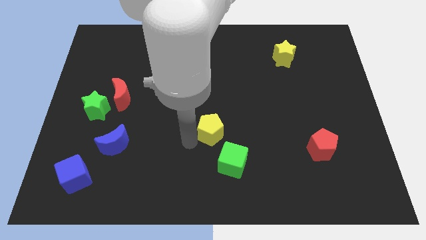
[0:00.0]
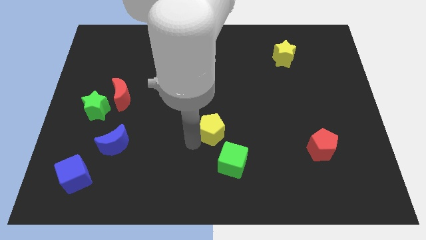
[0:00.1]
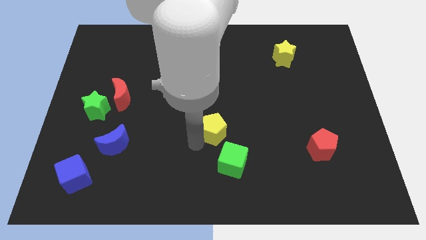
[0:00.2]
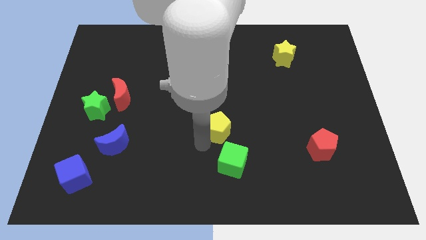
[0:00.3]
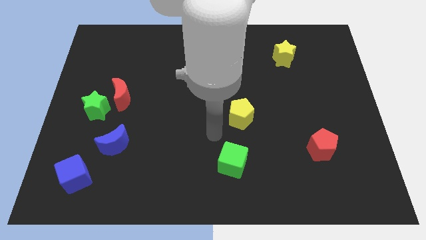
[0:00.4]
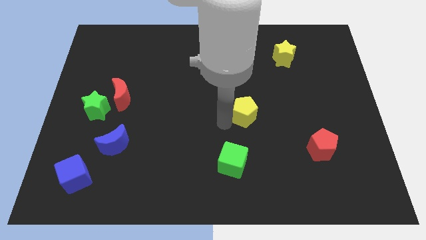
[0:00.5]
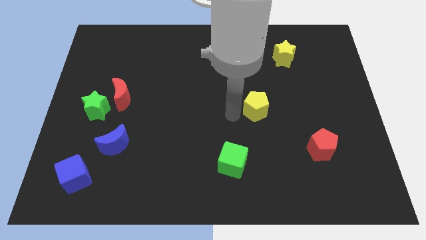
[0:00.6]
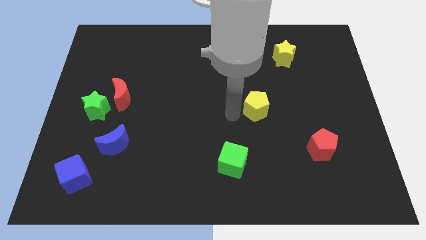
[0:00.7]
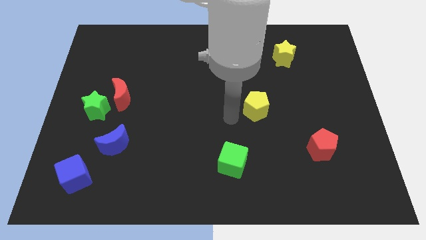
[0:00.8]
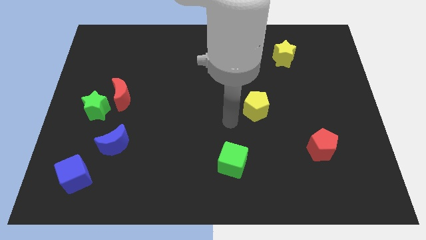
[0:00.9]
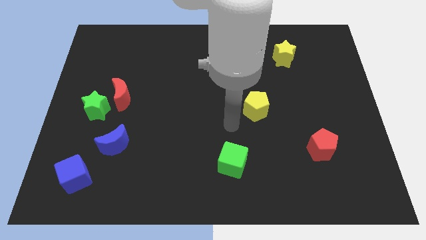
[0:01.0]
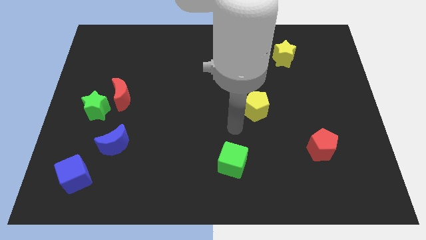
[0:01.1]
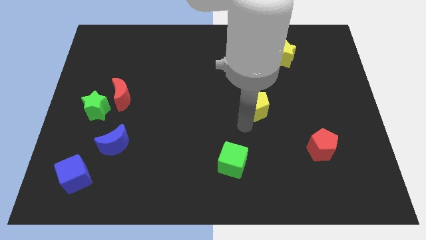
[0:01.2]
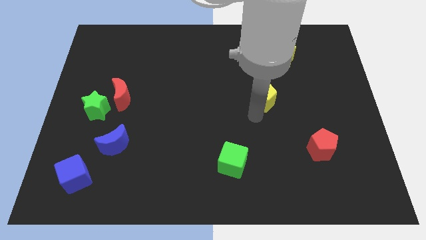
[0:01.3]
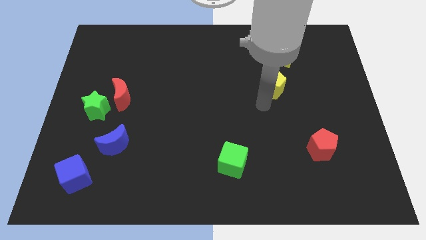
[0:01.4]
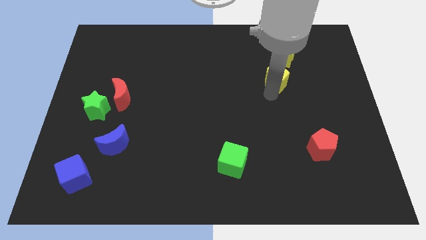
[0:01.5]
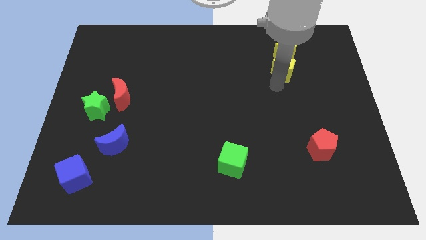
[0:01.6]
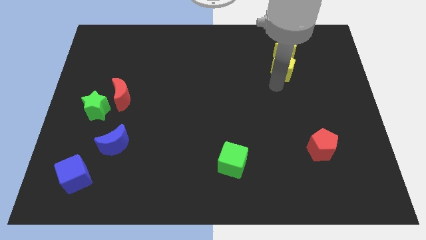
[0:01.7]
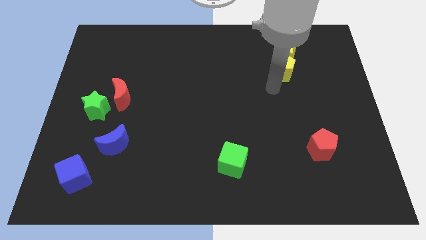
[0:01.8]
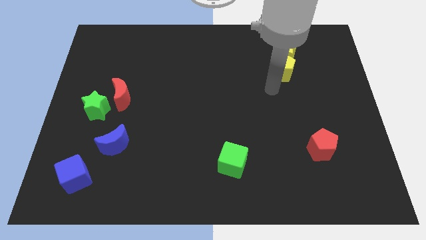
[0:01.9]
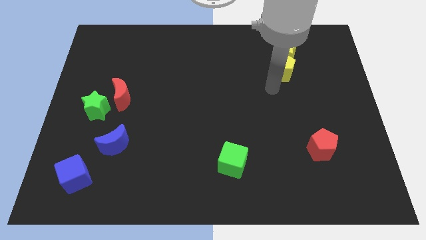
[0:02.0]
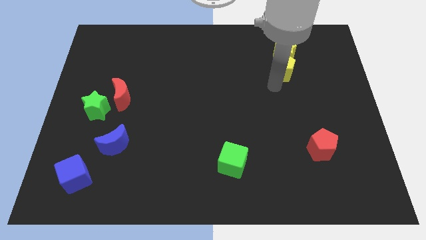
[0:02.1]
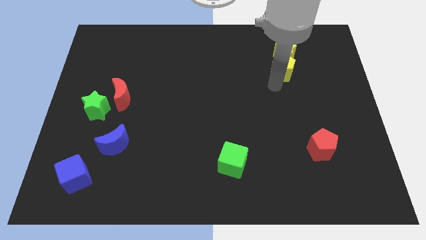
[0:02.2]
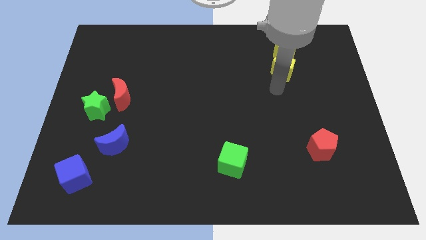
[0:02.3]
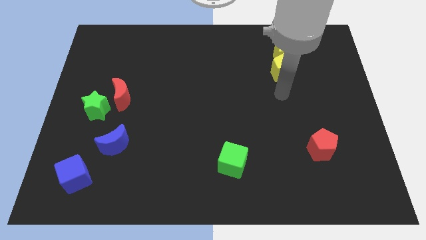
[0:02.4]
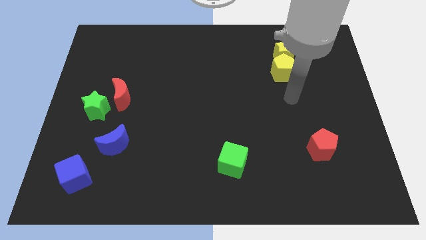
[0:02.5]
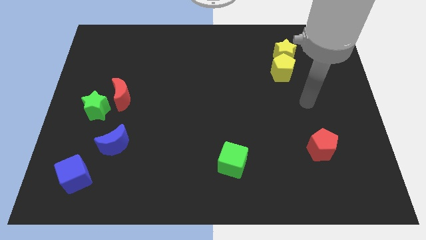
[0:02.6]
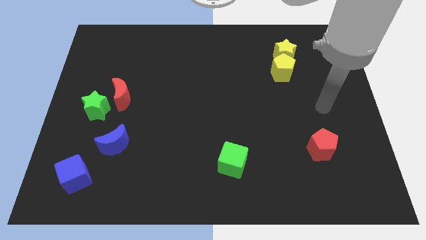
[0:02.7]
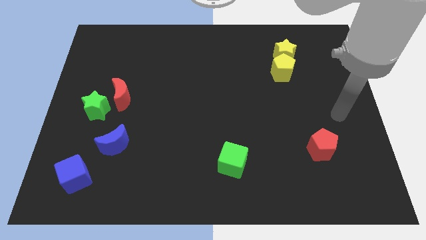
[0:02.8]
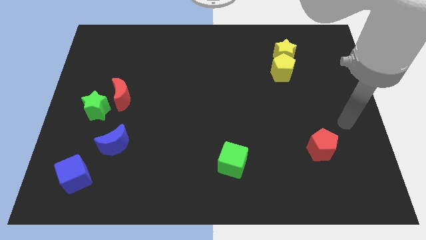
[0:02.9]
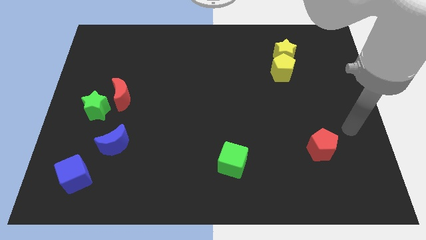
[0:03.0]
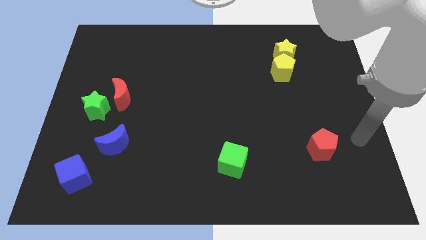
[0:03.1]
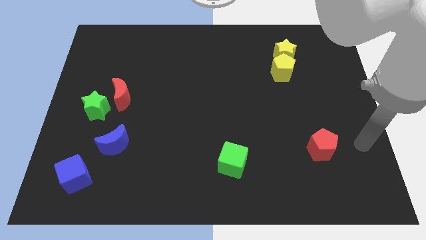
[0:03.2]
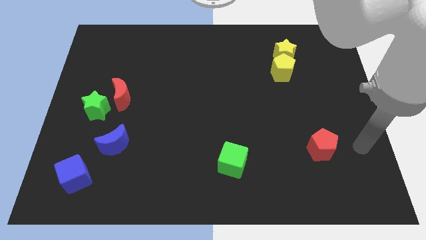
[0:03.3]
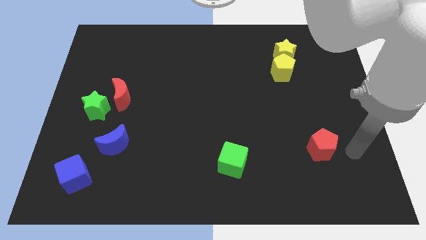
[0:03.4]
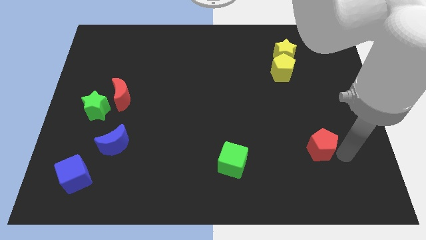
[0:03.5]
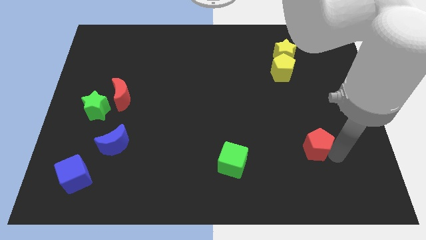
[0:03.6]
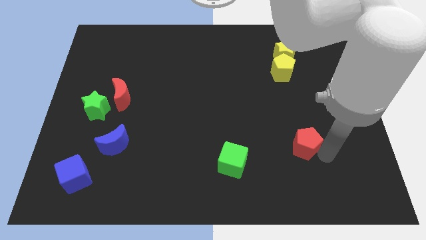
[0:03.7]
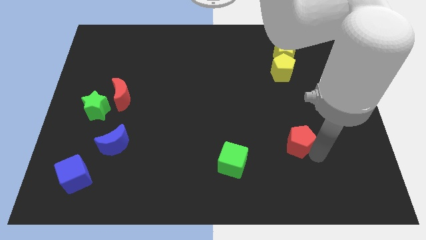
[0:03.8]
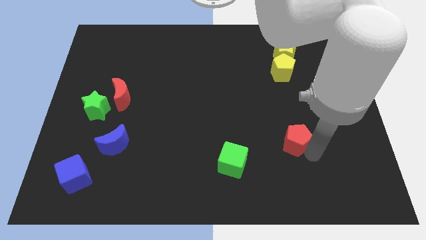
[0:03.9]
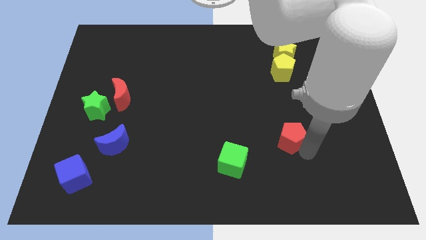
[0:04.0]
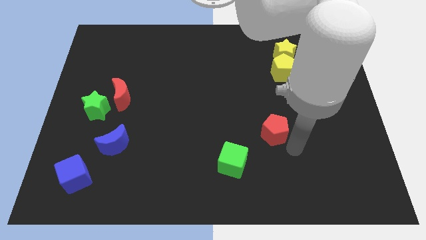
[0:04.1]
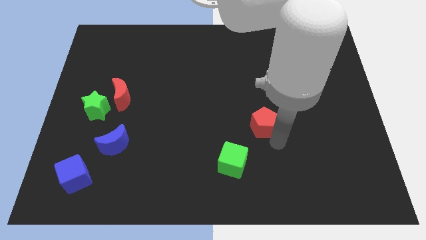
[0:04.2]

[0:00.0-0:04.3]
move red pentagon towards center

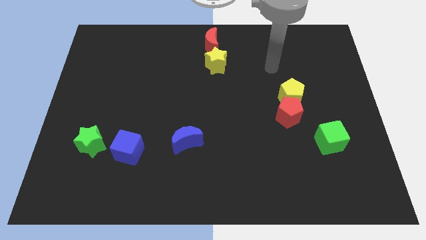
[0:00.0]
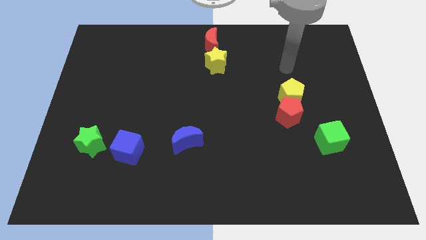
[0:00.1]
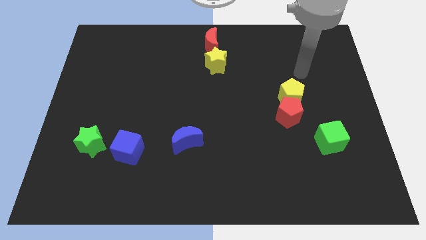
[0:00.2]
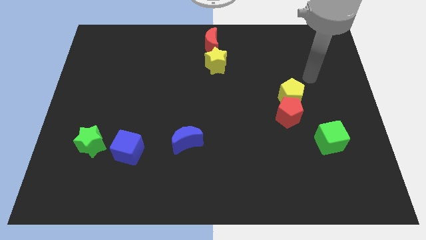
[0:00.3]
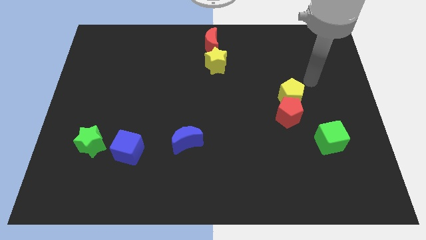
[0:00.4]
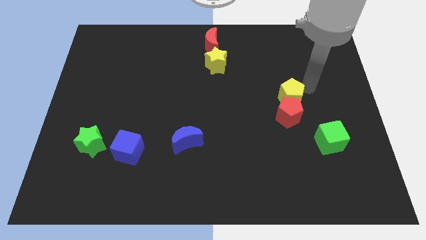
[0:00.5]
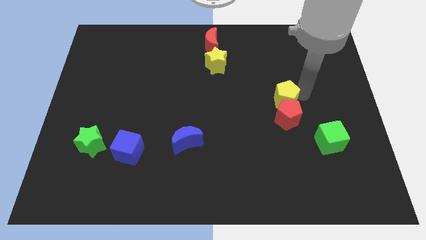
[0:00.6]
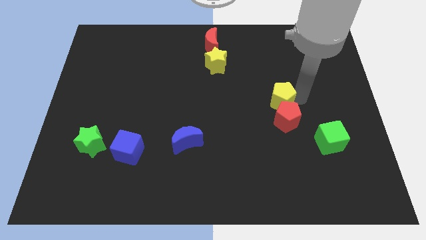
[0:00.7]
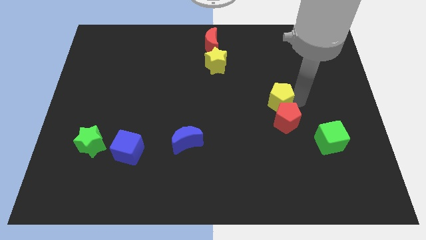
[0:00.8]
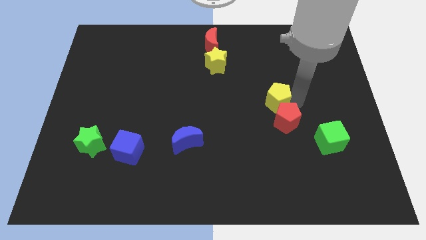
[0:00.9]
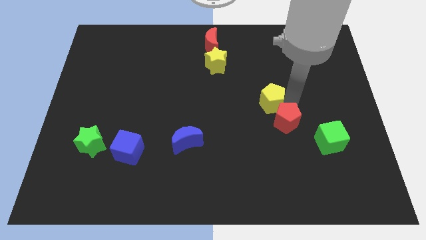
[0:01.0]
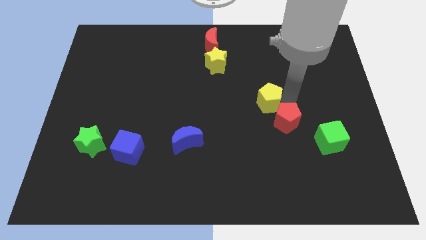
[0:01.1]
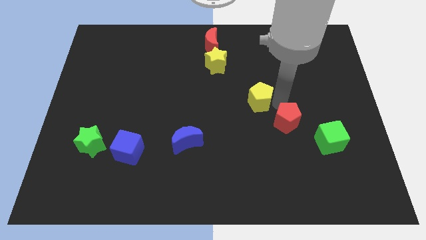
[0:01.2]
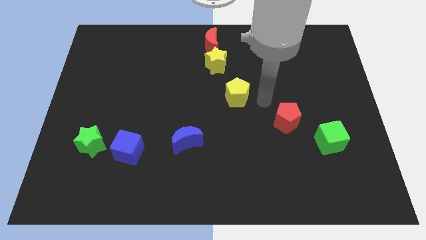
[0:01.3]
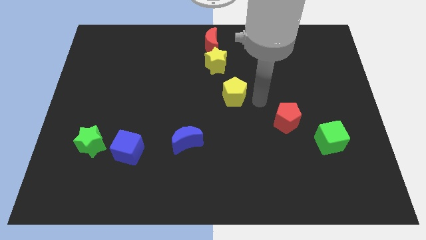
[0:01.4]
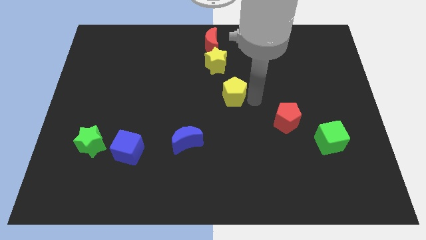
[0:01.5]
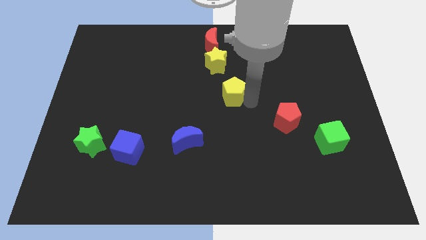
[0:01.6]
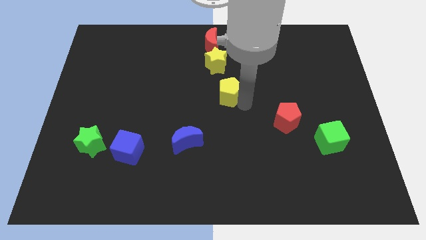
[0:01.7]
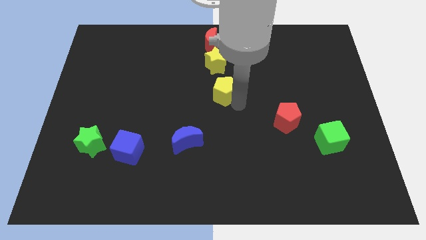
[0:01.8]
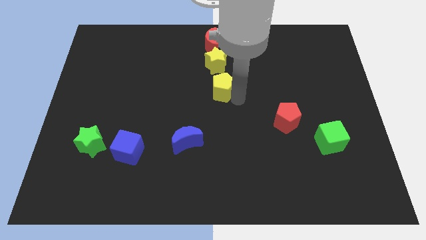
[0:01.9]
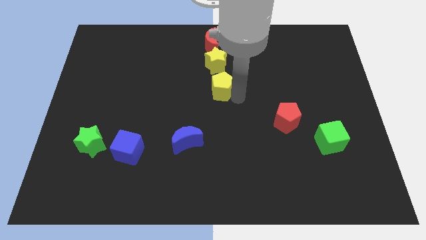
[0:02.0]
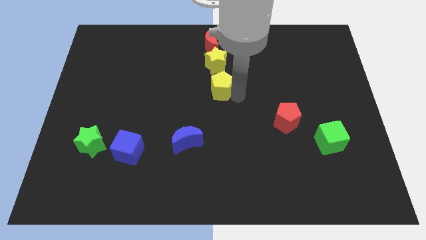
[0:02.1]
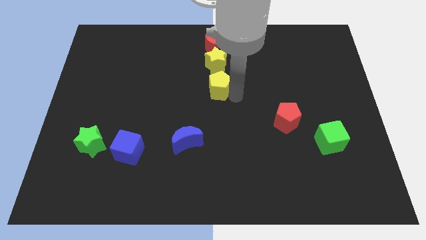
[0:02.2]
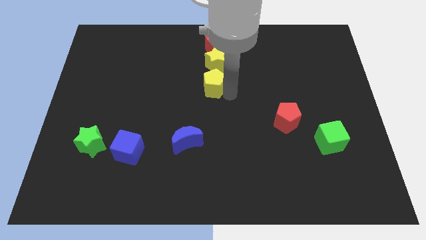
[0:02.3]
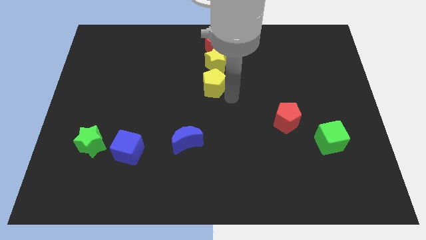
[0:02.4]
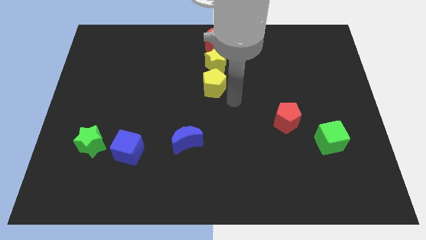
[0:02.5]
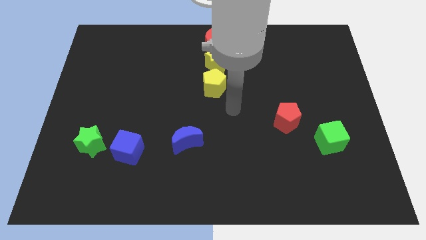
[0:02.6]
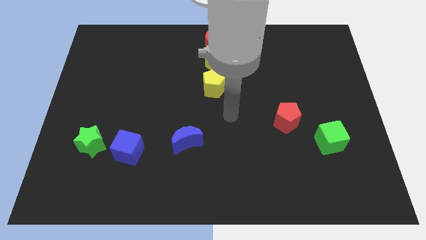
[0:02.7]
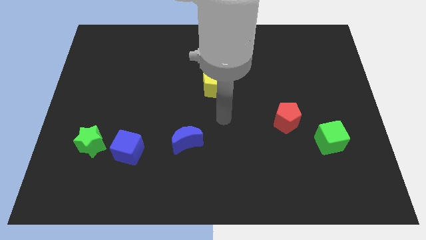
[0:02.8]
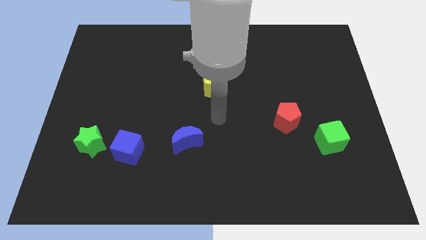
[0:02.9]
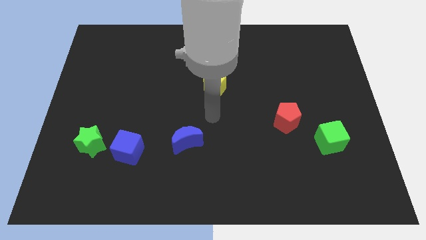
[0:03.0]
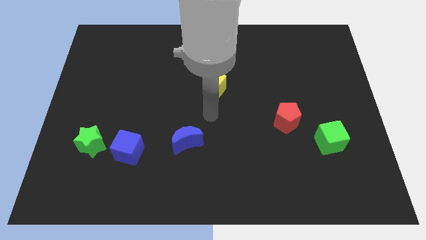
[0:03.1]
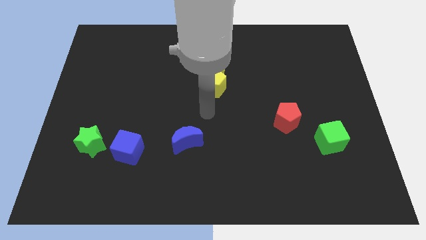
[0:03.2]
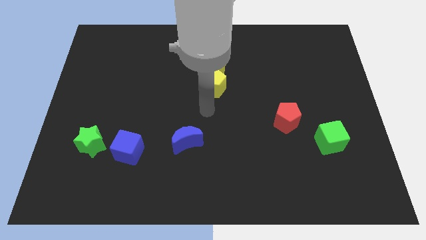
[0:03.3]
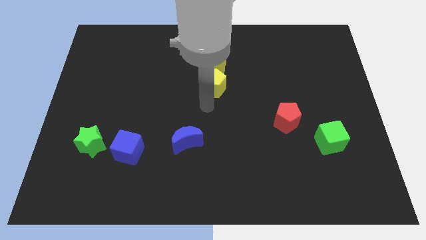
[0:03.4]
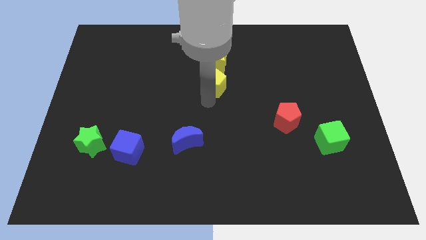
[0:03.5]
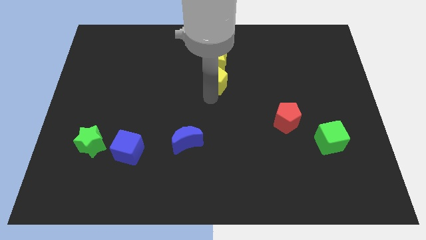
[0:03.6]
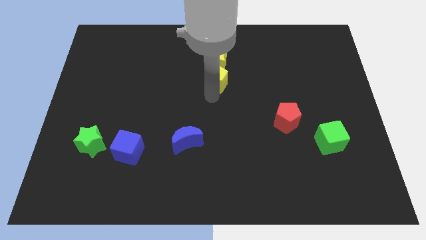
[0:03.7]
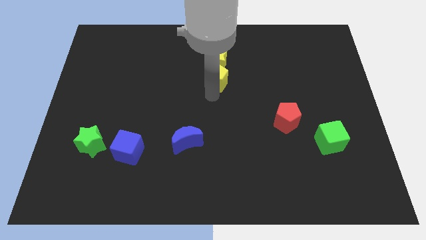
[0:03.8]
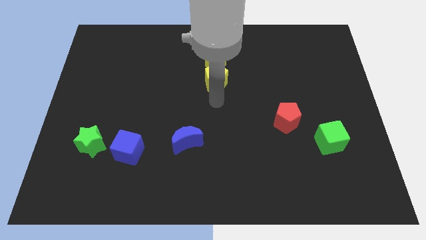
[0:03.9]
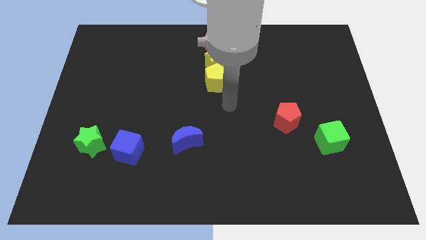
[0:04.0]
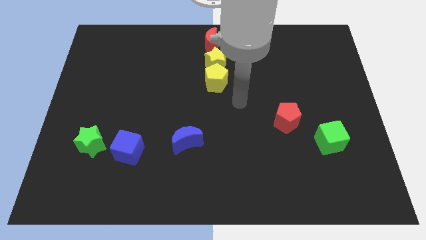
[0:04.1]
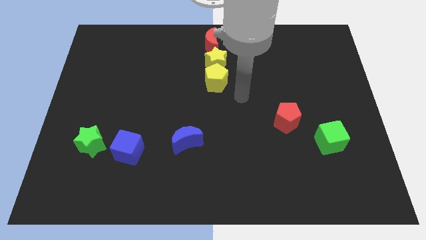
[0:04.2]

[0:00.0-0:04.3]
move the yellow pentagon to the bottom side of the yellow star

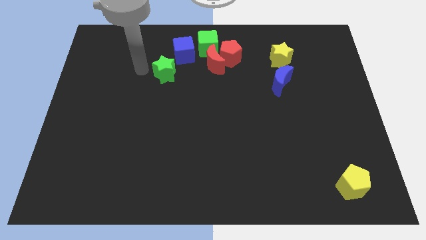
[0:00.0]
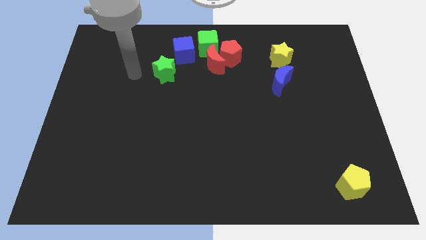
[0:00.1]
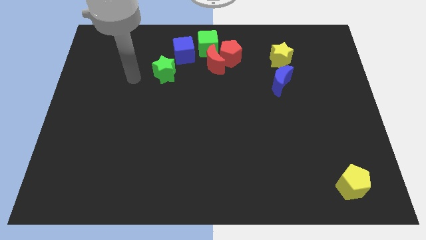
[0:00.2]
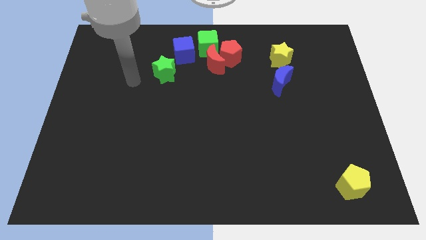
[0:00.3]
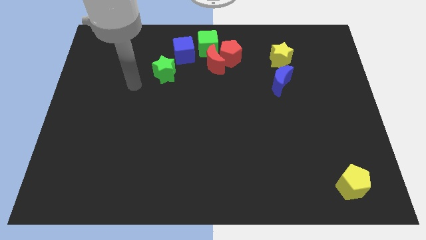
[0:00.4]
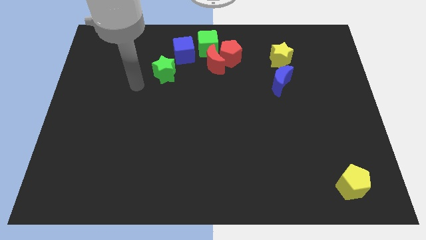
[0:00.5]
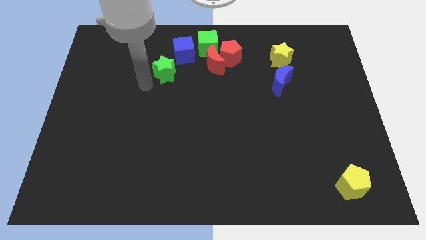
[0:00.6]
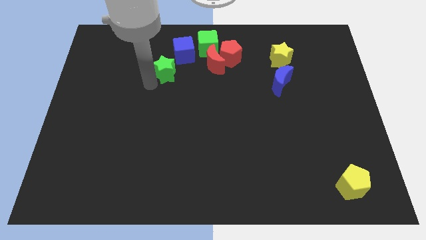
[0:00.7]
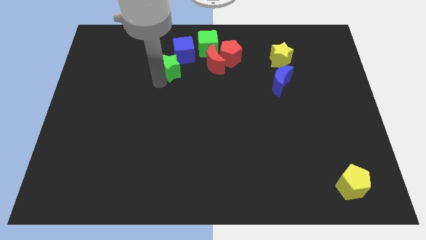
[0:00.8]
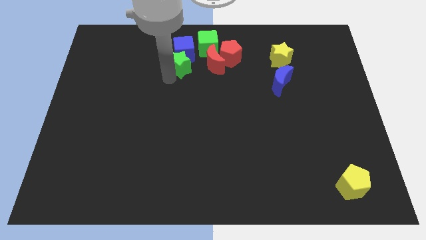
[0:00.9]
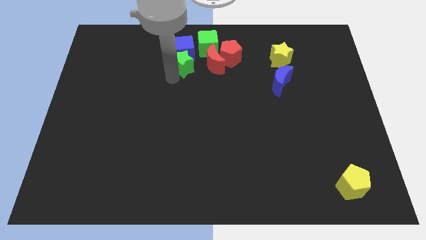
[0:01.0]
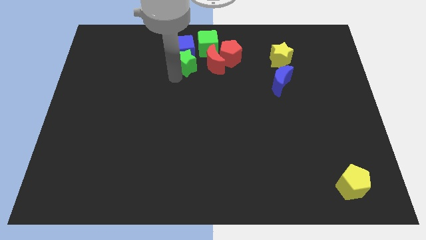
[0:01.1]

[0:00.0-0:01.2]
push the green star to the bottom of the blue cube
